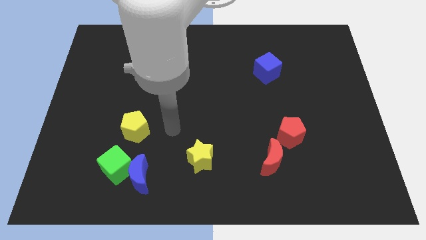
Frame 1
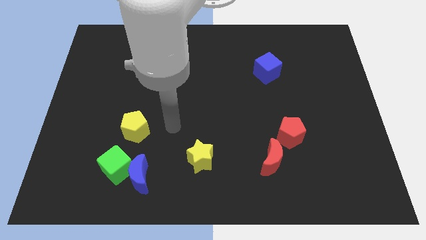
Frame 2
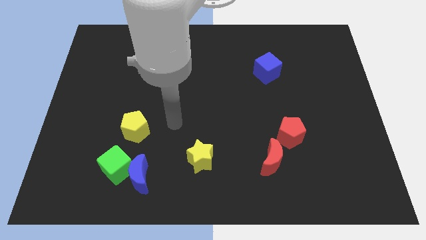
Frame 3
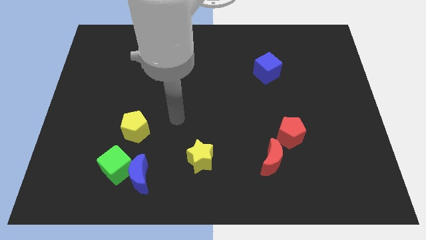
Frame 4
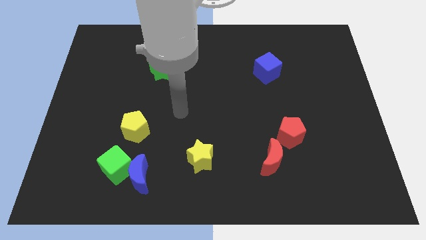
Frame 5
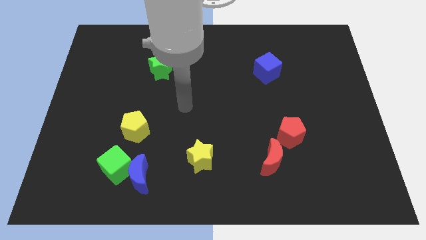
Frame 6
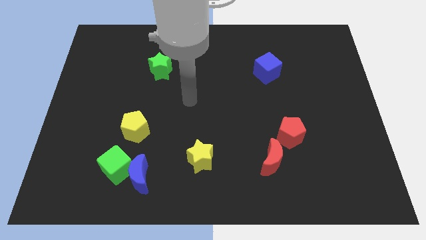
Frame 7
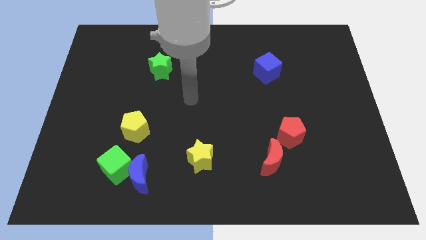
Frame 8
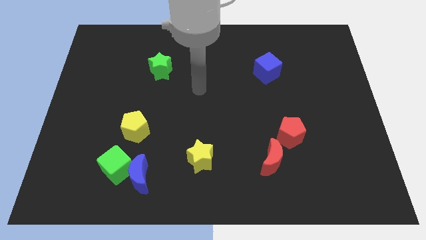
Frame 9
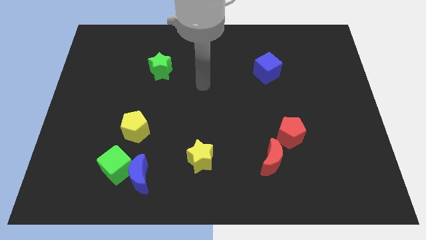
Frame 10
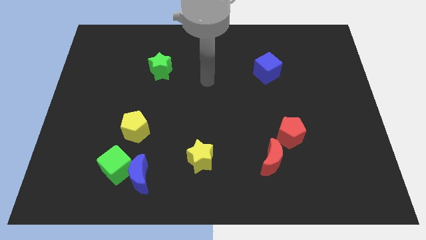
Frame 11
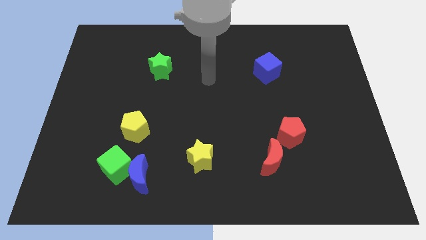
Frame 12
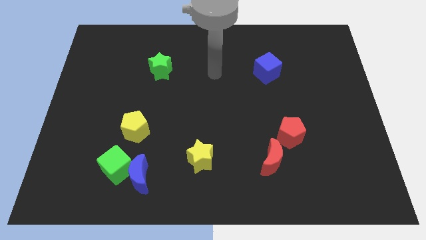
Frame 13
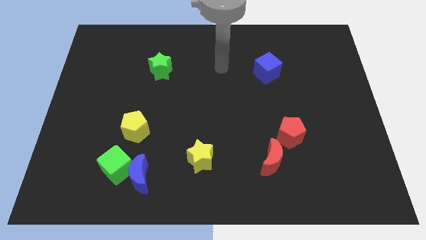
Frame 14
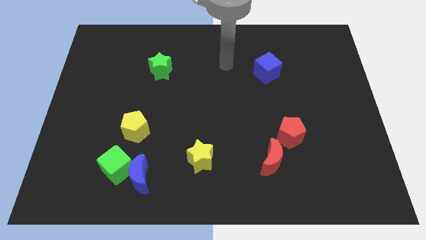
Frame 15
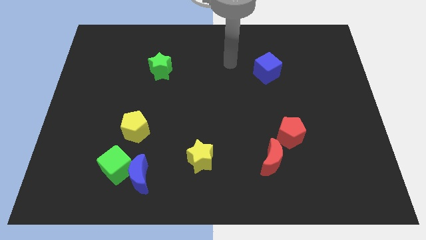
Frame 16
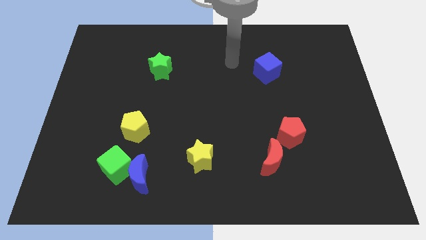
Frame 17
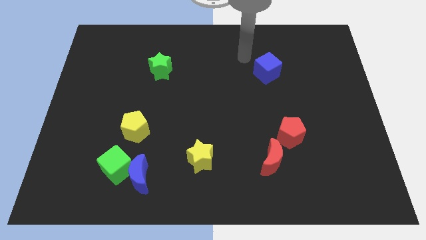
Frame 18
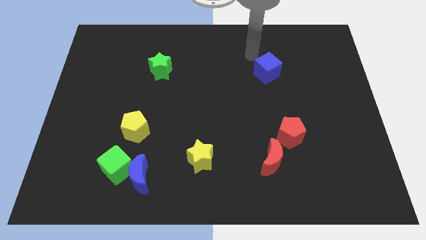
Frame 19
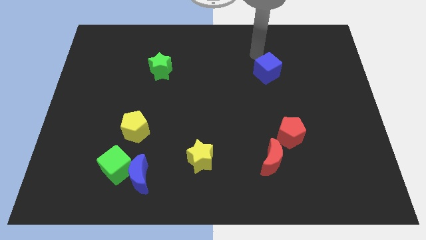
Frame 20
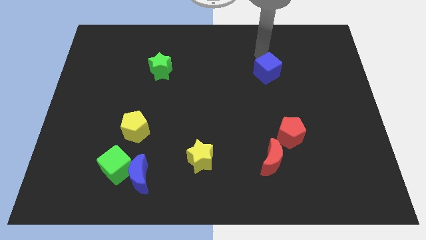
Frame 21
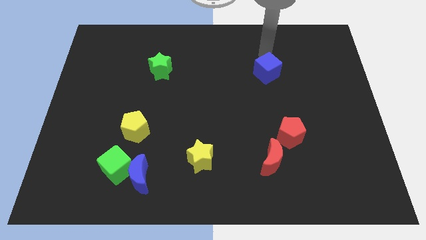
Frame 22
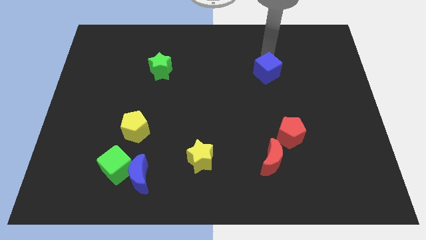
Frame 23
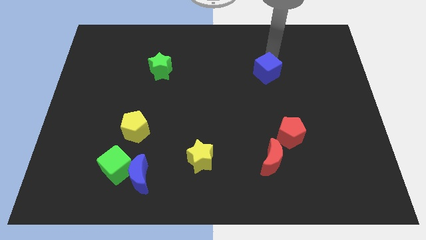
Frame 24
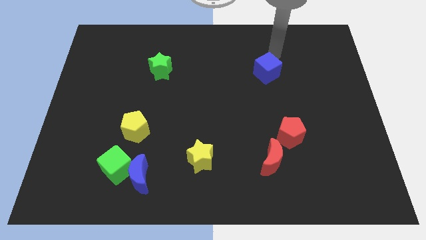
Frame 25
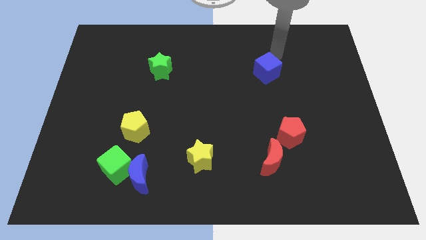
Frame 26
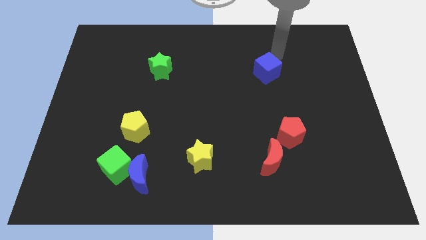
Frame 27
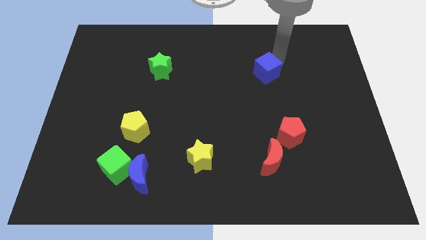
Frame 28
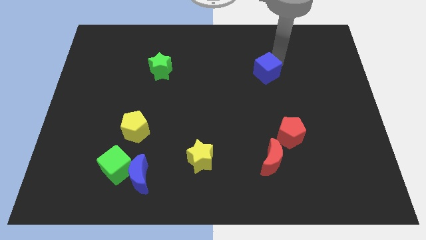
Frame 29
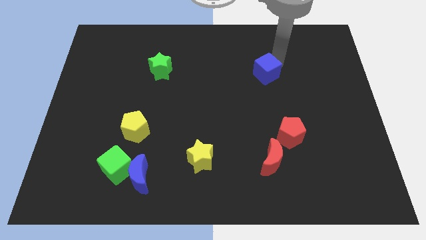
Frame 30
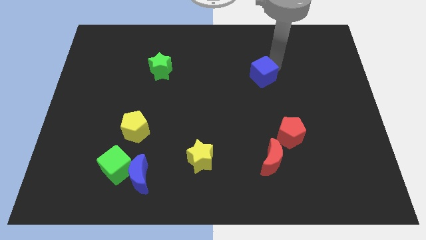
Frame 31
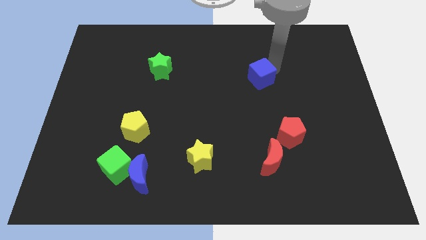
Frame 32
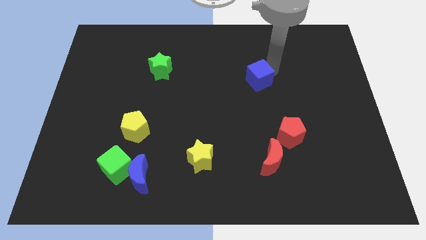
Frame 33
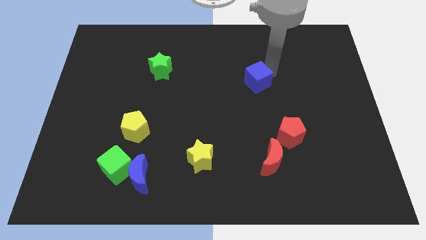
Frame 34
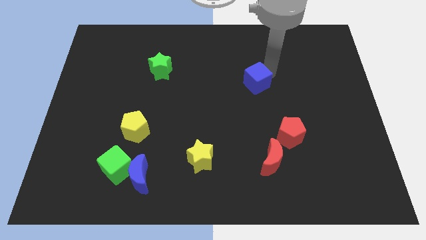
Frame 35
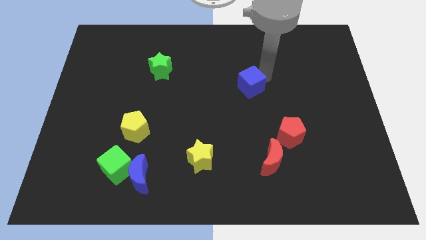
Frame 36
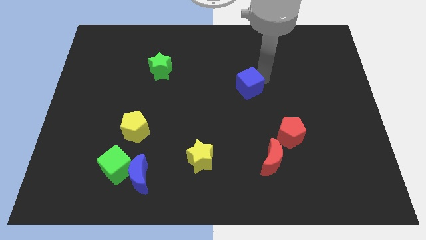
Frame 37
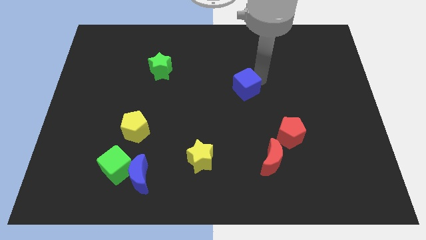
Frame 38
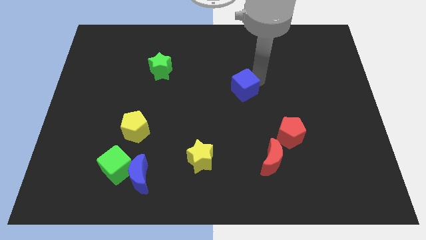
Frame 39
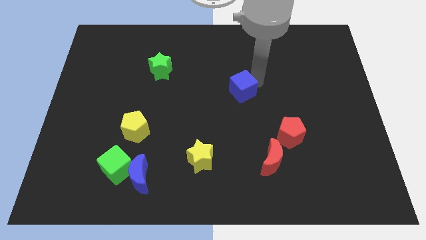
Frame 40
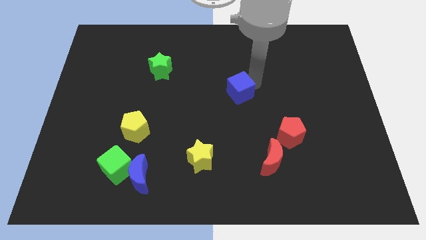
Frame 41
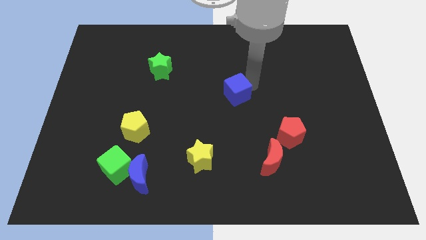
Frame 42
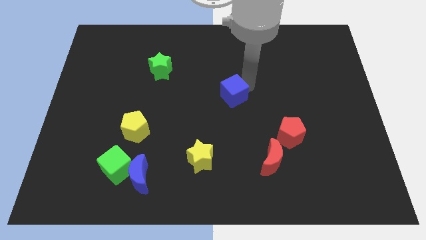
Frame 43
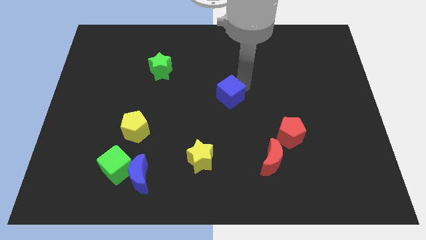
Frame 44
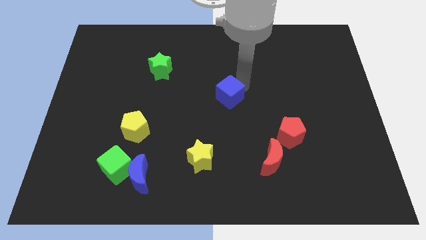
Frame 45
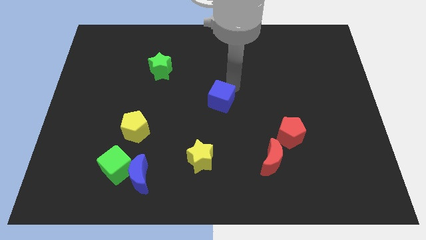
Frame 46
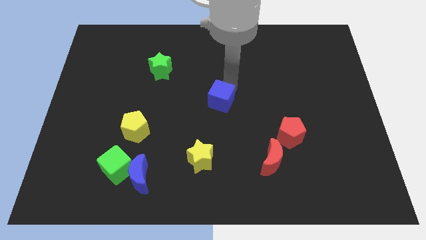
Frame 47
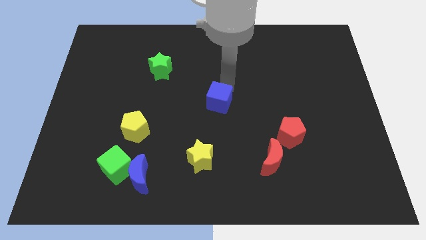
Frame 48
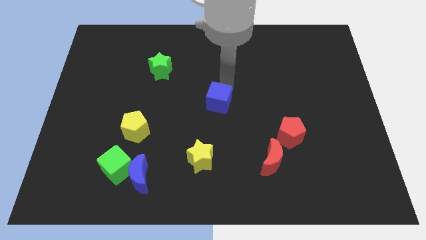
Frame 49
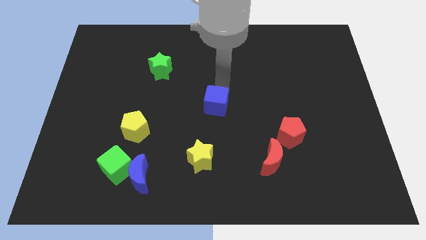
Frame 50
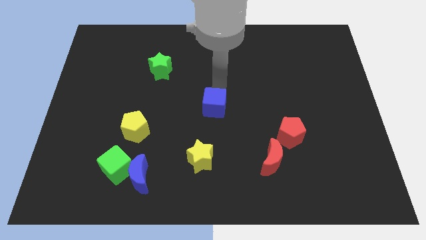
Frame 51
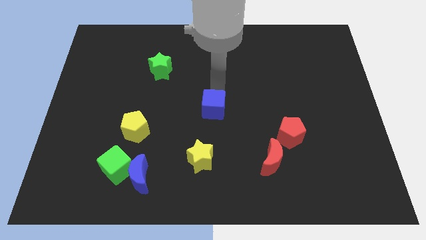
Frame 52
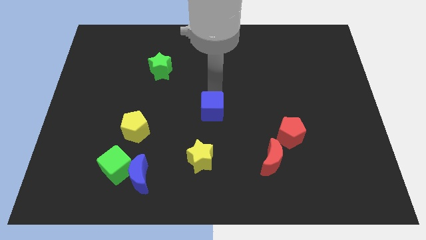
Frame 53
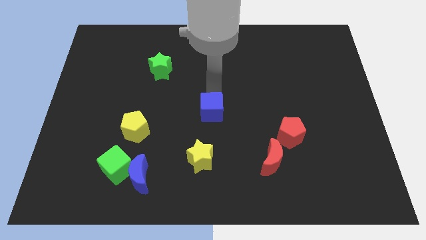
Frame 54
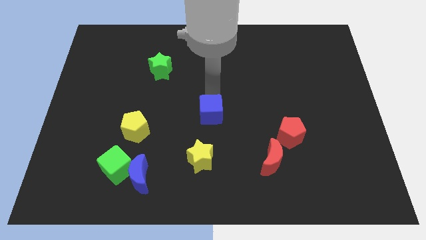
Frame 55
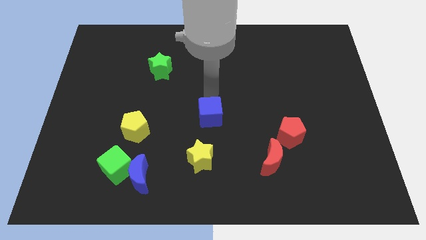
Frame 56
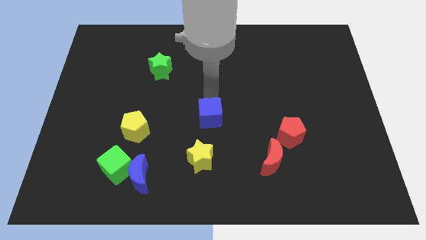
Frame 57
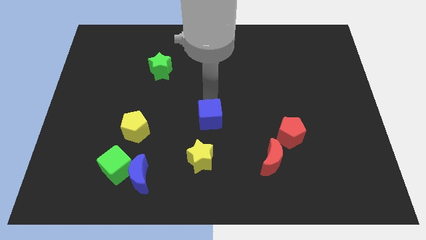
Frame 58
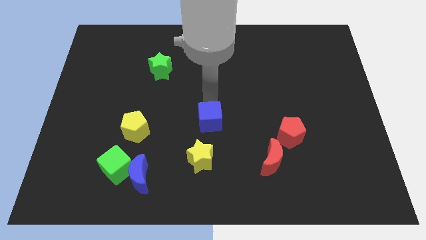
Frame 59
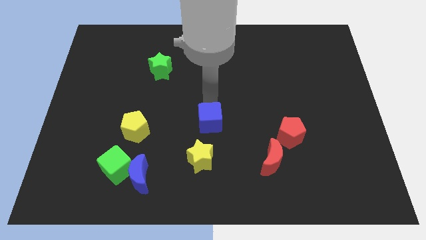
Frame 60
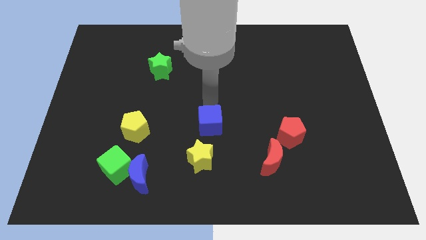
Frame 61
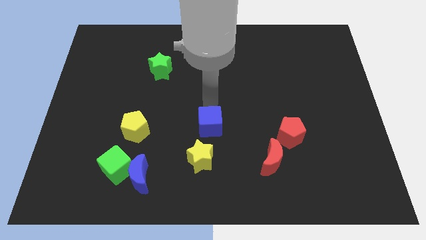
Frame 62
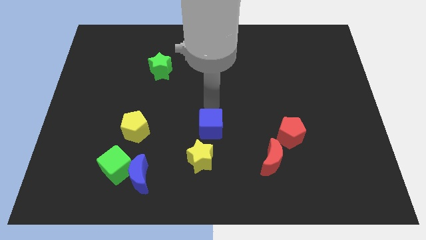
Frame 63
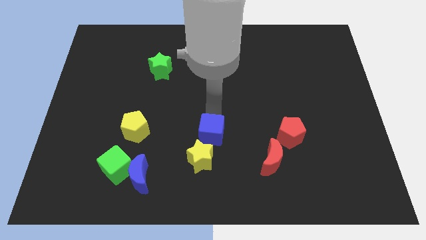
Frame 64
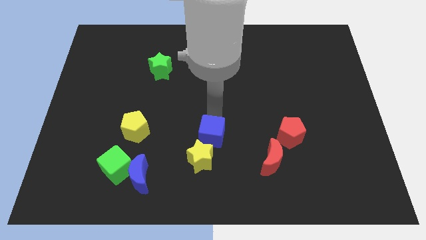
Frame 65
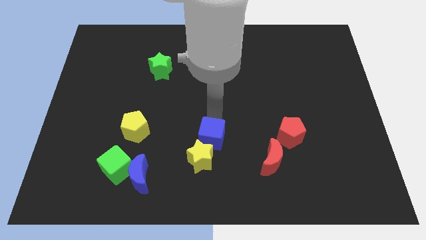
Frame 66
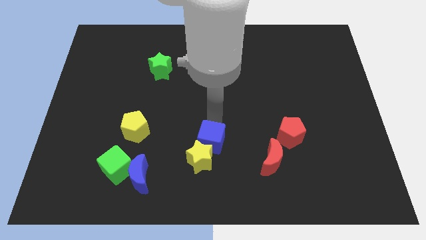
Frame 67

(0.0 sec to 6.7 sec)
put the blue cube towards the yellow star

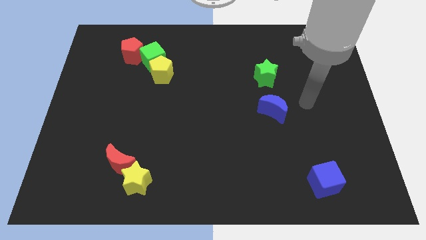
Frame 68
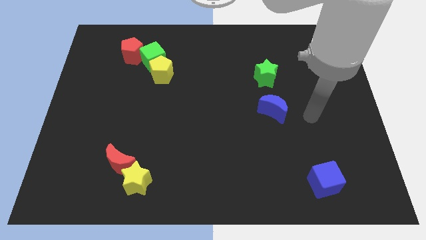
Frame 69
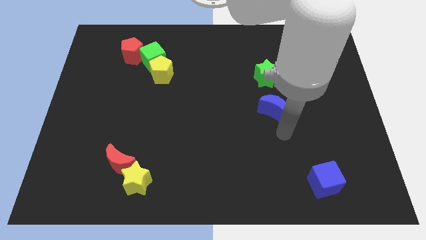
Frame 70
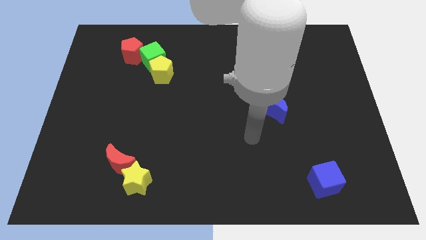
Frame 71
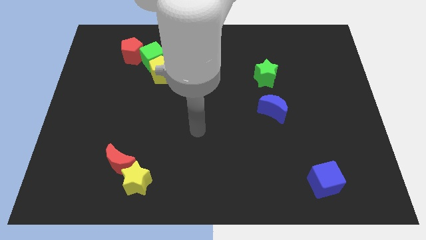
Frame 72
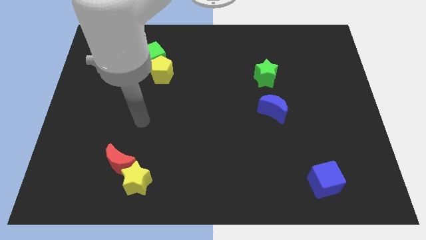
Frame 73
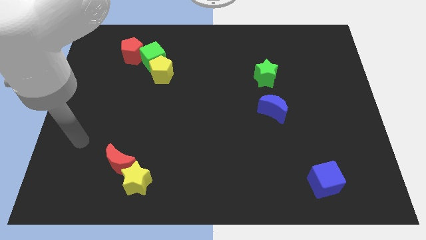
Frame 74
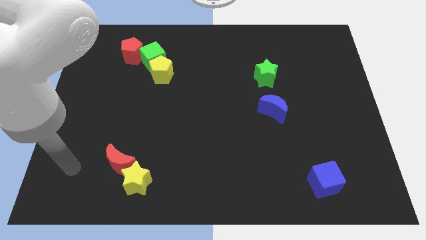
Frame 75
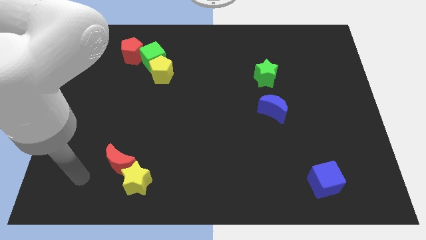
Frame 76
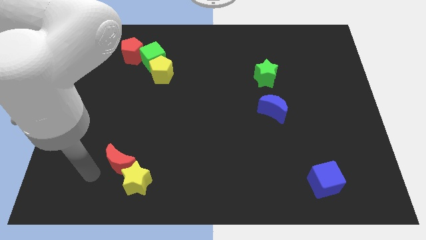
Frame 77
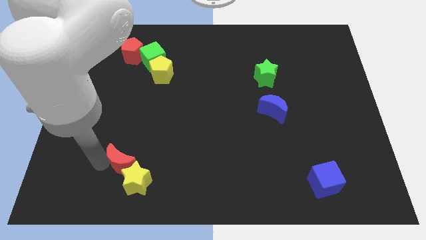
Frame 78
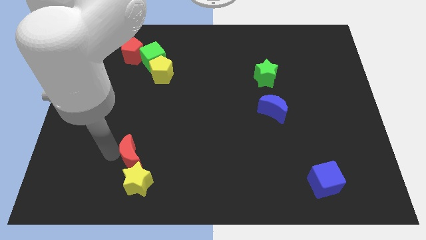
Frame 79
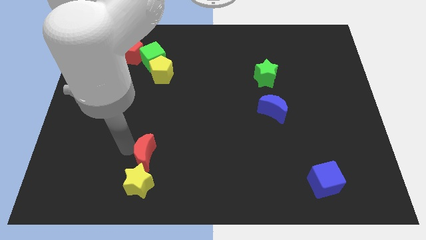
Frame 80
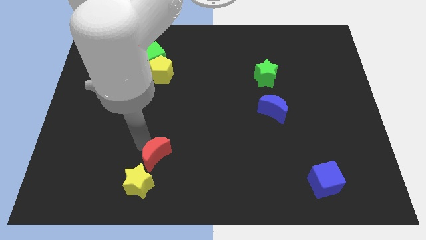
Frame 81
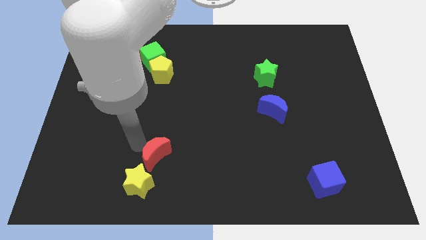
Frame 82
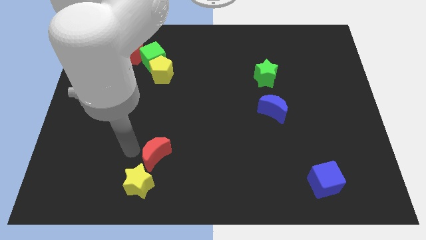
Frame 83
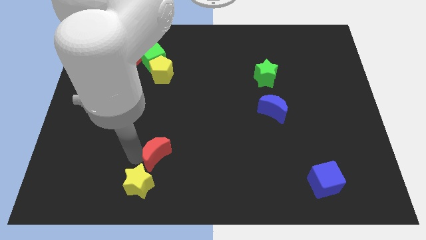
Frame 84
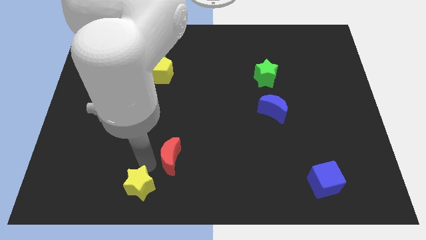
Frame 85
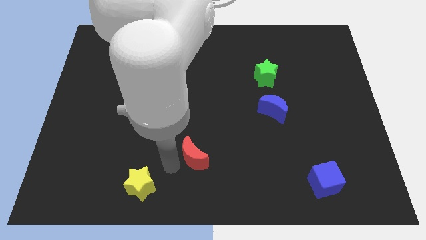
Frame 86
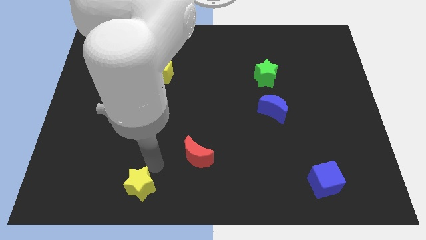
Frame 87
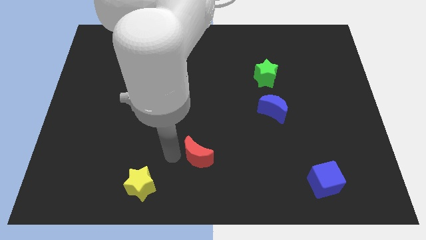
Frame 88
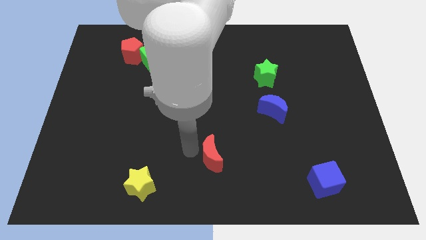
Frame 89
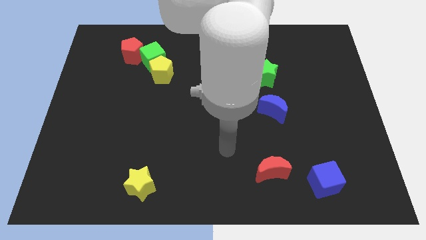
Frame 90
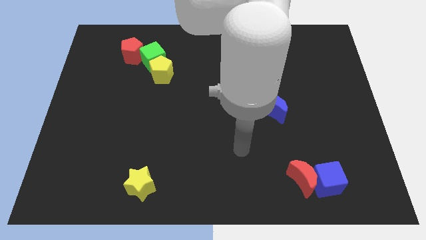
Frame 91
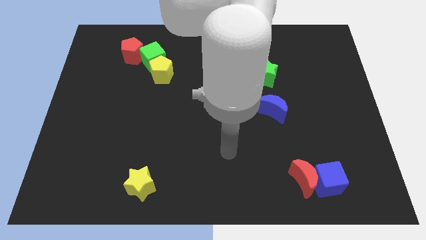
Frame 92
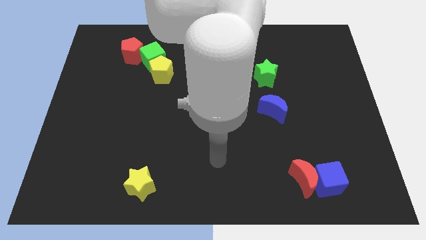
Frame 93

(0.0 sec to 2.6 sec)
push the red moon close to the blue cube
